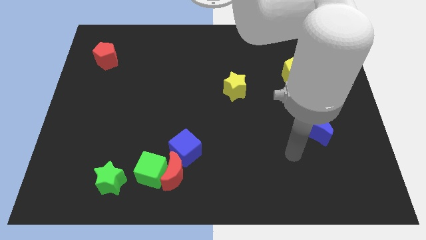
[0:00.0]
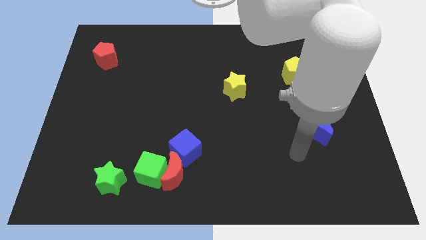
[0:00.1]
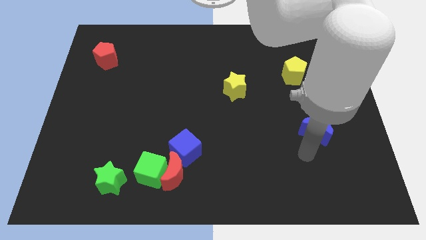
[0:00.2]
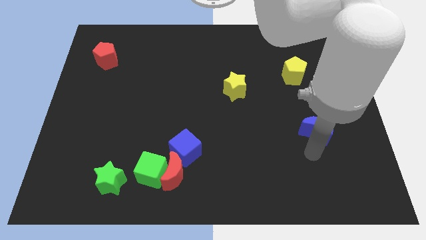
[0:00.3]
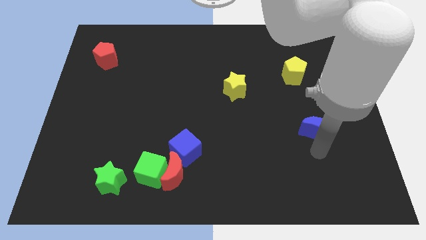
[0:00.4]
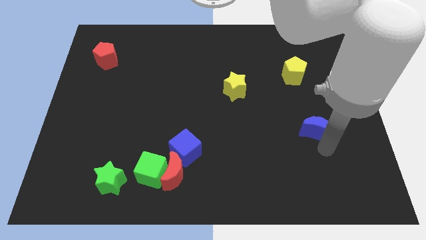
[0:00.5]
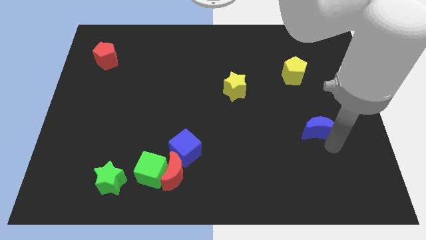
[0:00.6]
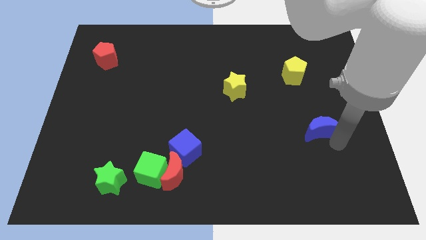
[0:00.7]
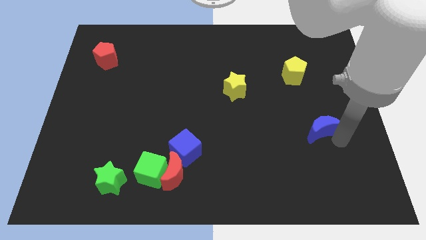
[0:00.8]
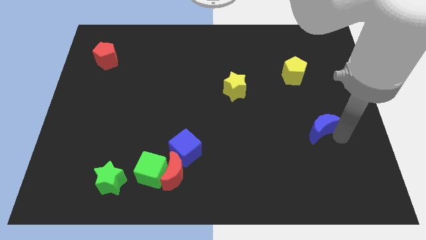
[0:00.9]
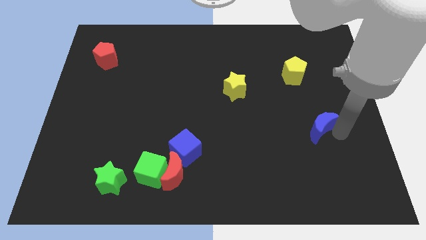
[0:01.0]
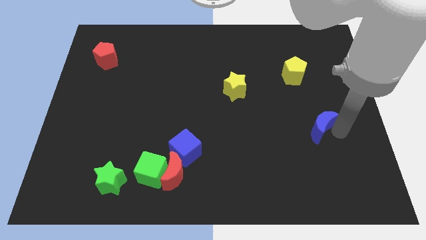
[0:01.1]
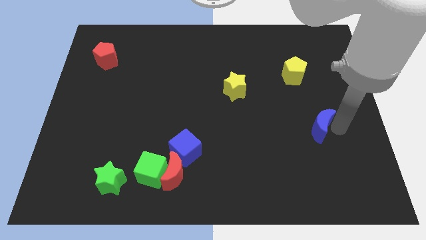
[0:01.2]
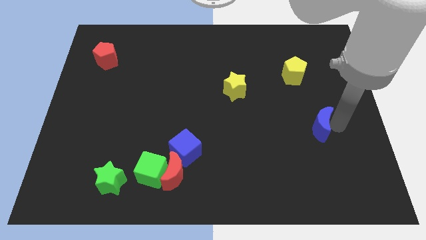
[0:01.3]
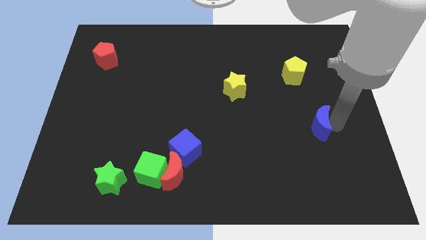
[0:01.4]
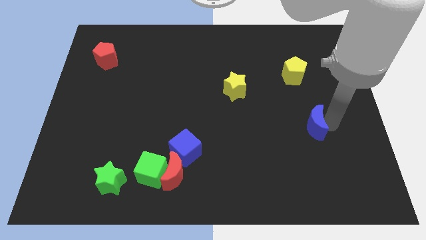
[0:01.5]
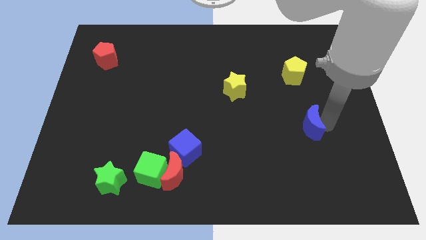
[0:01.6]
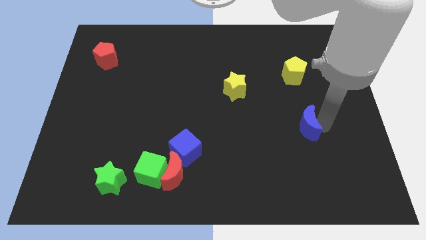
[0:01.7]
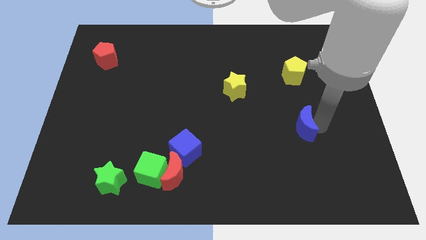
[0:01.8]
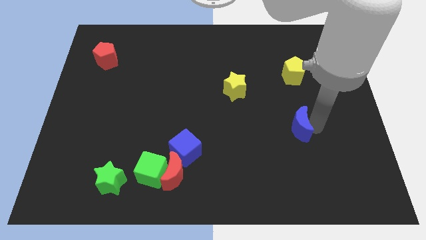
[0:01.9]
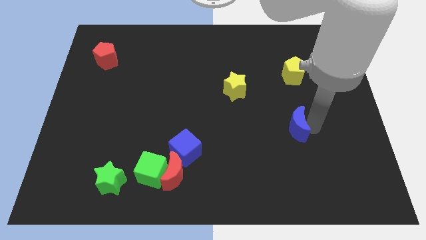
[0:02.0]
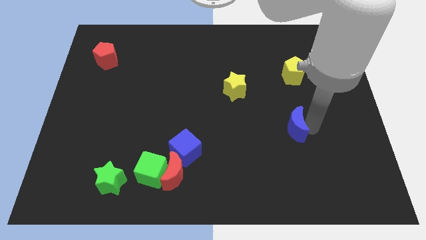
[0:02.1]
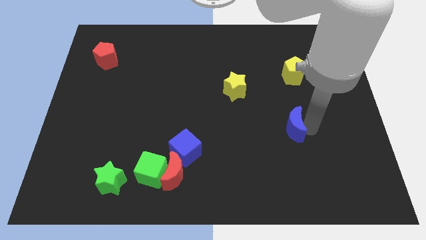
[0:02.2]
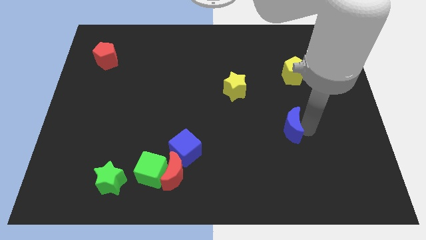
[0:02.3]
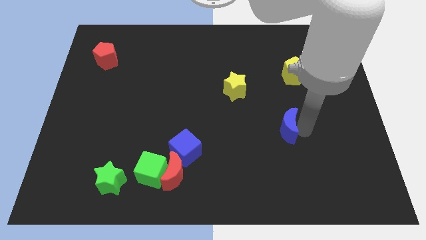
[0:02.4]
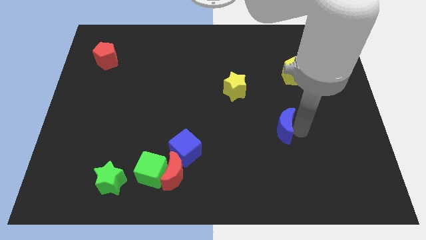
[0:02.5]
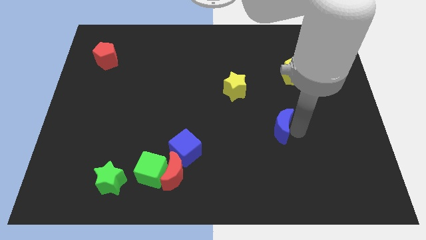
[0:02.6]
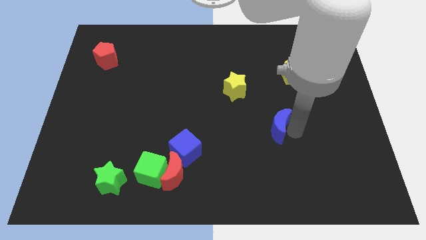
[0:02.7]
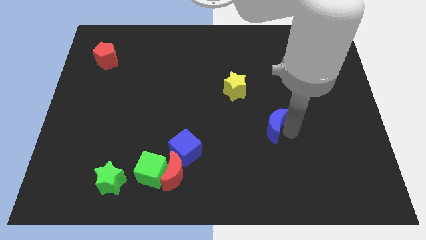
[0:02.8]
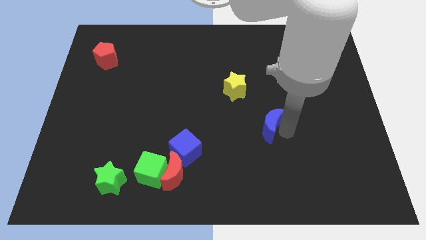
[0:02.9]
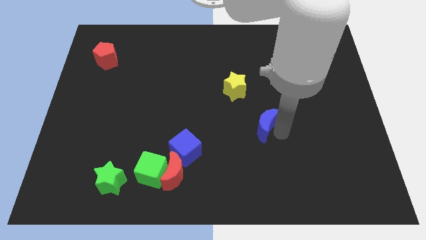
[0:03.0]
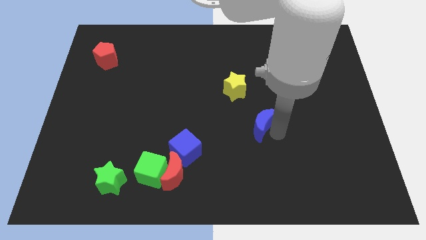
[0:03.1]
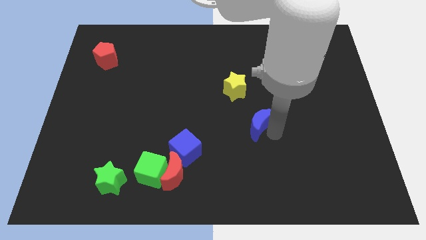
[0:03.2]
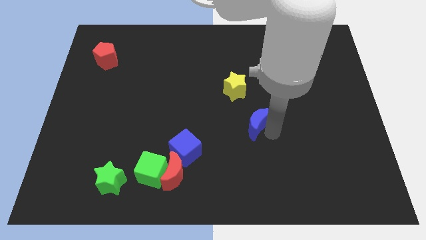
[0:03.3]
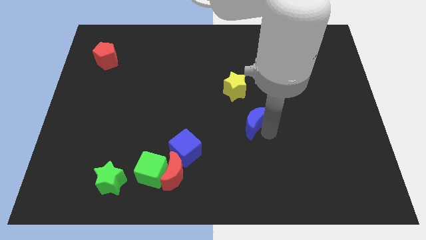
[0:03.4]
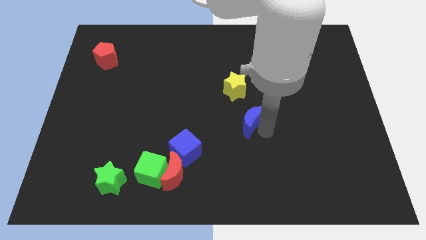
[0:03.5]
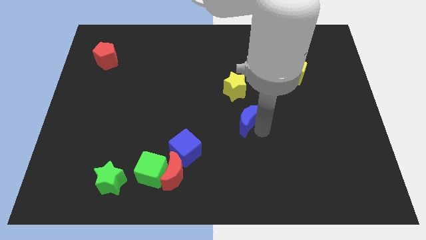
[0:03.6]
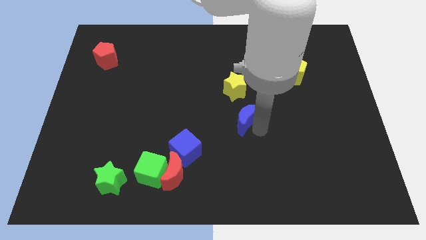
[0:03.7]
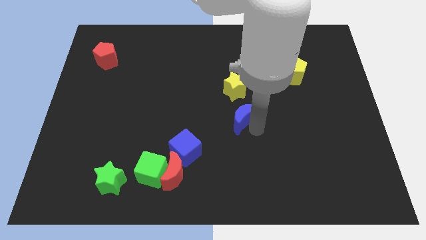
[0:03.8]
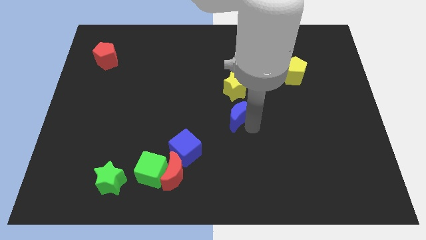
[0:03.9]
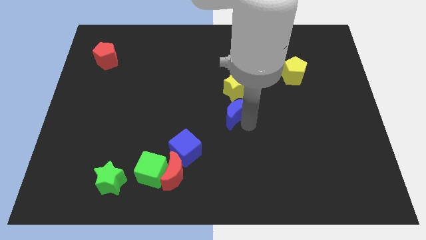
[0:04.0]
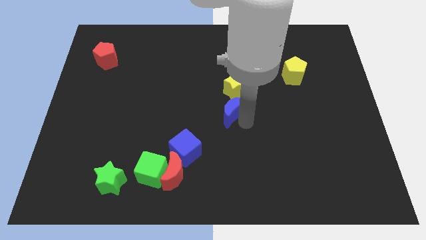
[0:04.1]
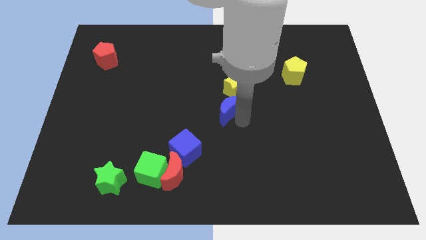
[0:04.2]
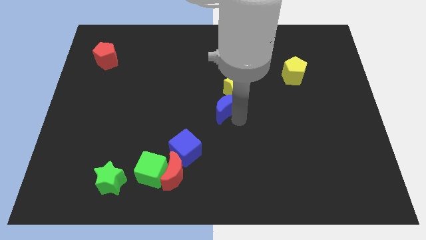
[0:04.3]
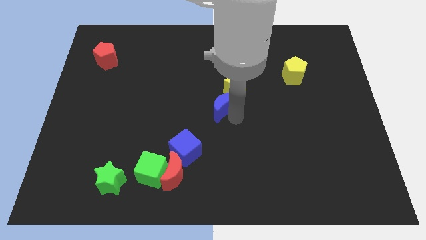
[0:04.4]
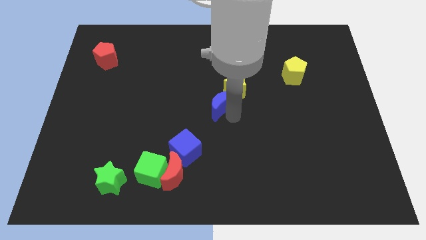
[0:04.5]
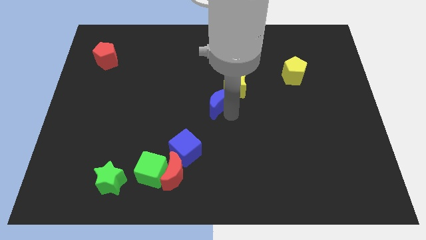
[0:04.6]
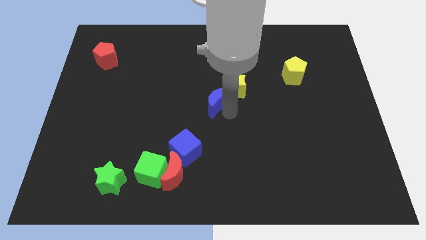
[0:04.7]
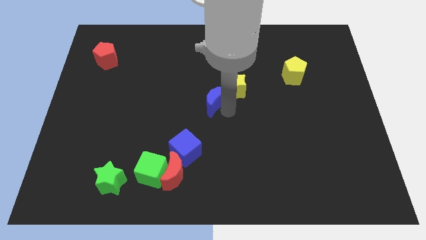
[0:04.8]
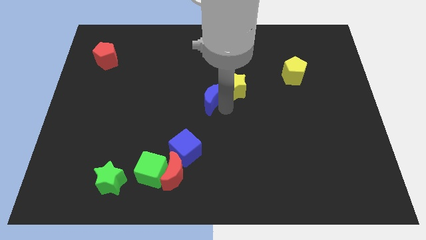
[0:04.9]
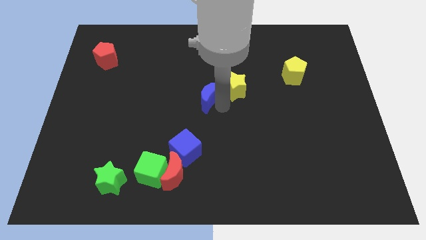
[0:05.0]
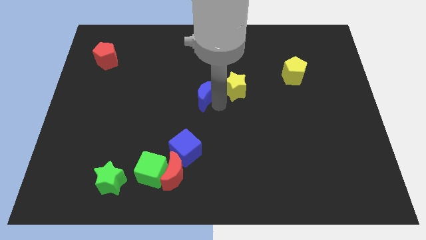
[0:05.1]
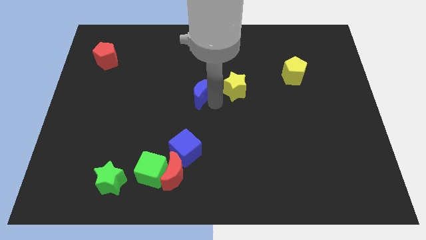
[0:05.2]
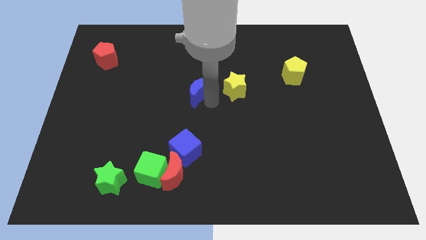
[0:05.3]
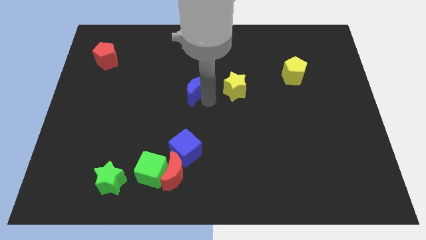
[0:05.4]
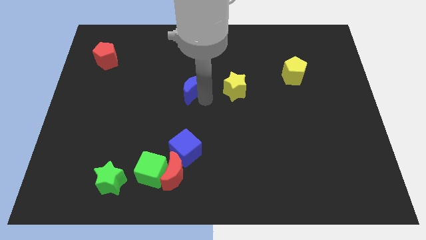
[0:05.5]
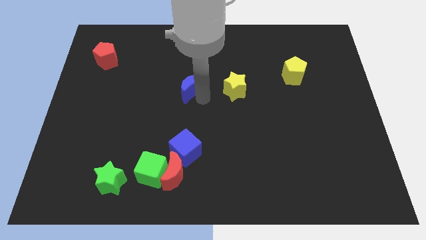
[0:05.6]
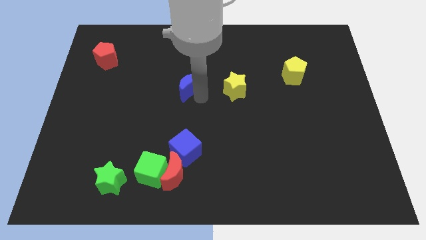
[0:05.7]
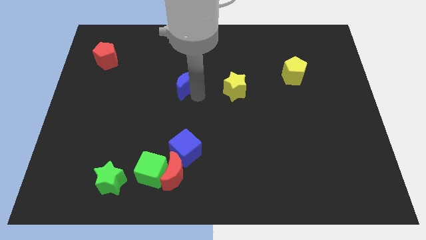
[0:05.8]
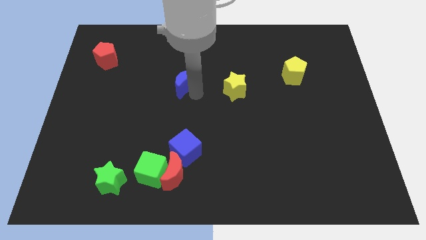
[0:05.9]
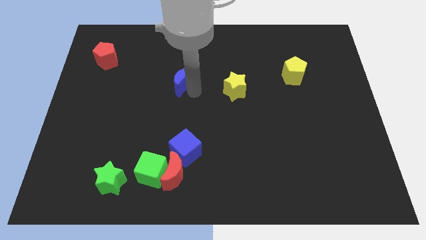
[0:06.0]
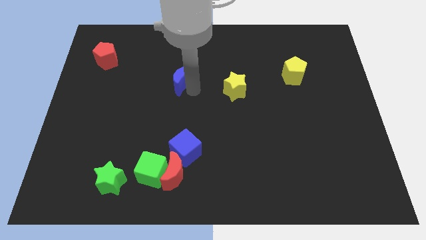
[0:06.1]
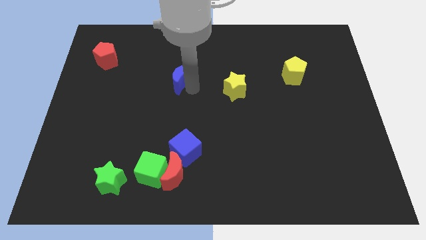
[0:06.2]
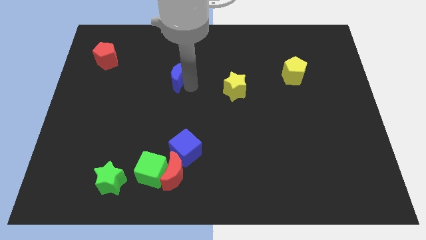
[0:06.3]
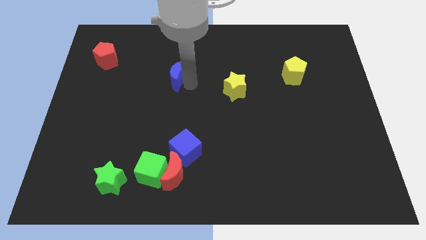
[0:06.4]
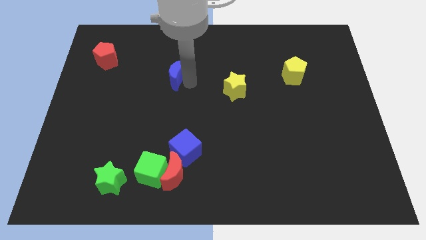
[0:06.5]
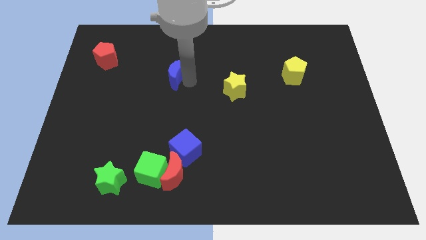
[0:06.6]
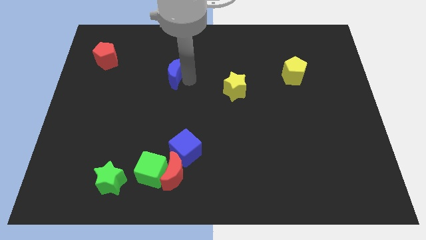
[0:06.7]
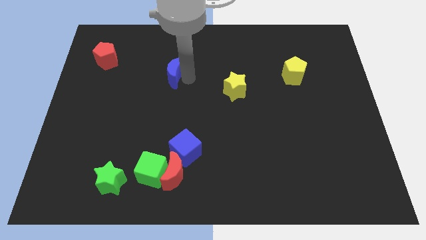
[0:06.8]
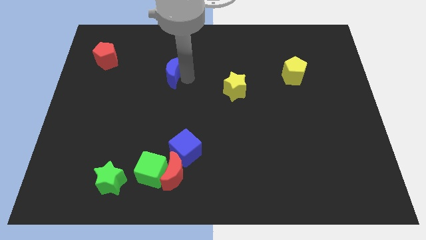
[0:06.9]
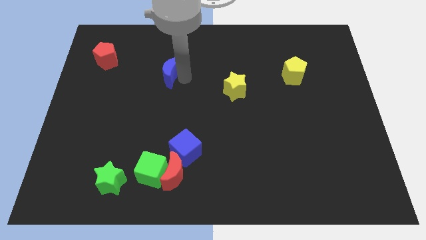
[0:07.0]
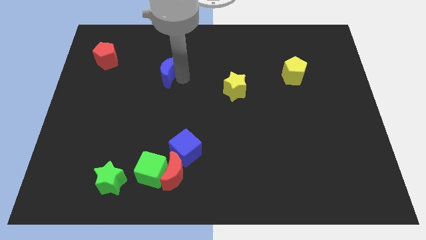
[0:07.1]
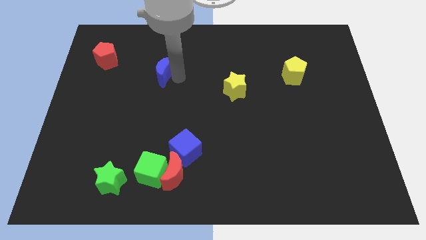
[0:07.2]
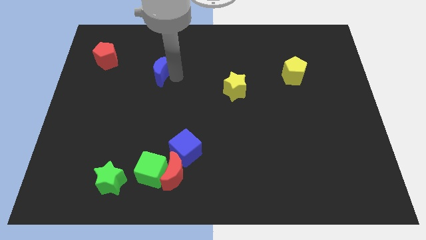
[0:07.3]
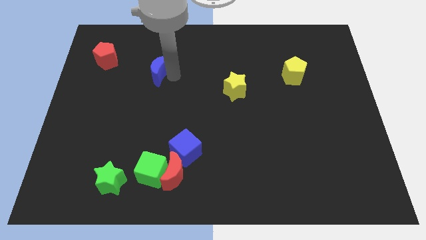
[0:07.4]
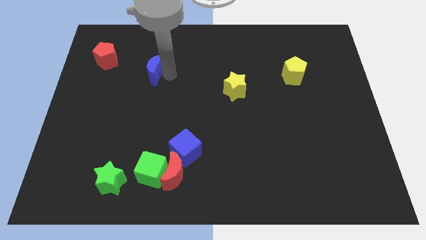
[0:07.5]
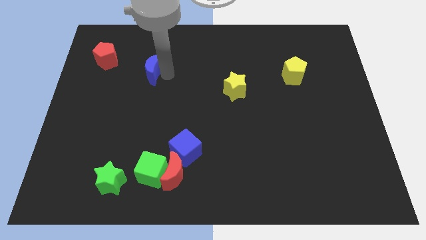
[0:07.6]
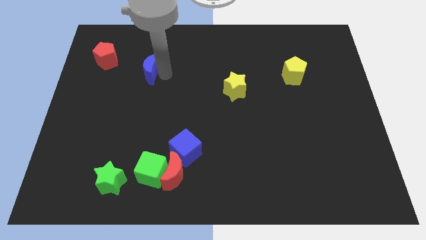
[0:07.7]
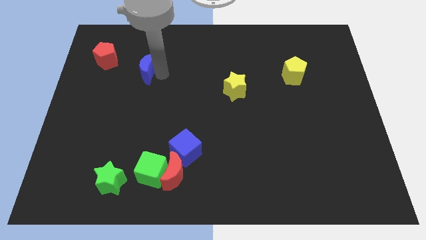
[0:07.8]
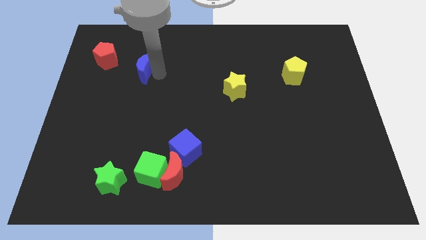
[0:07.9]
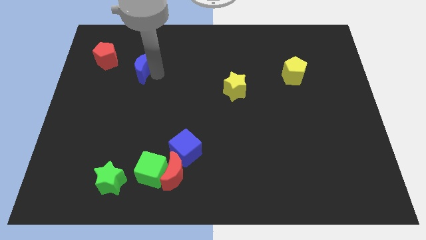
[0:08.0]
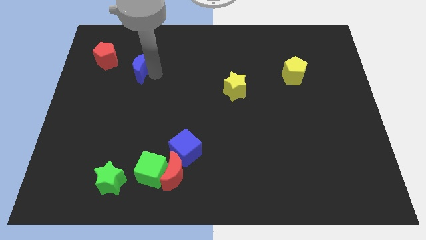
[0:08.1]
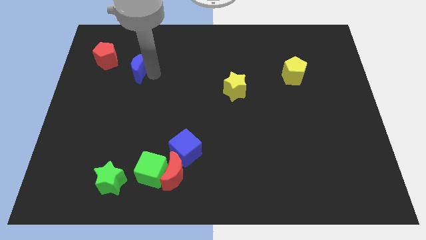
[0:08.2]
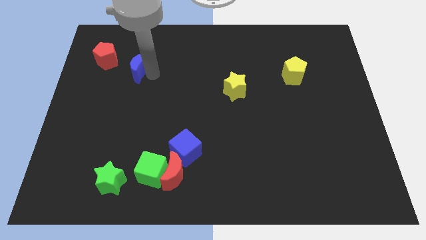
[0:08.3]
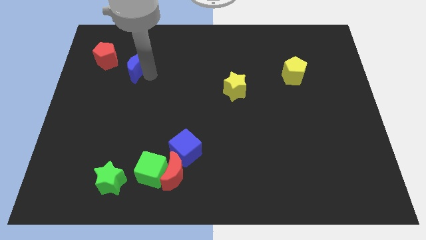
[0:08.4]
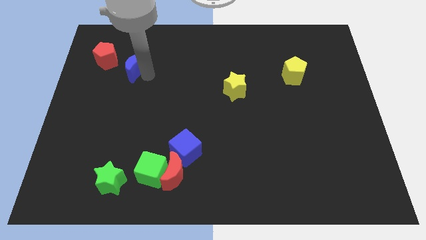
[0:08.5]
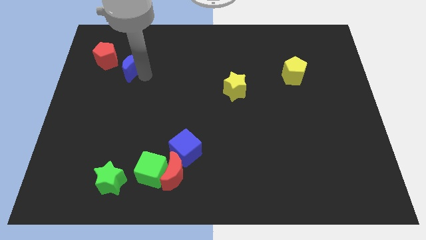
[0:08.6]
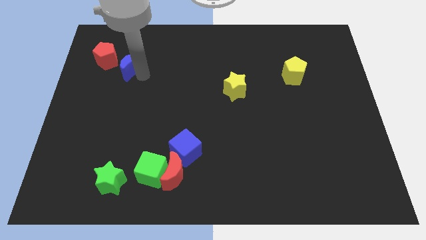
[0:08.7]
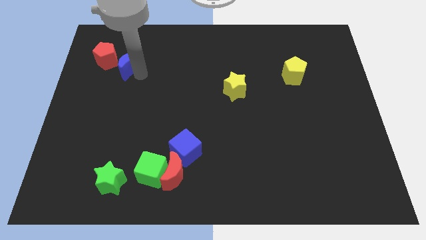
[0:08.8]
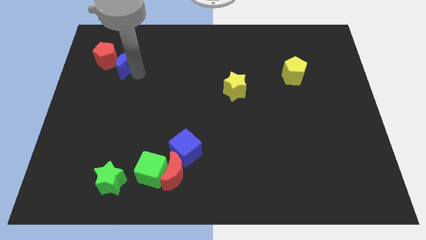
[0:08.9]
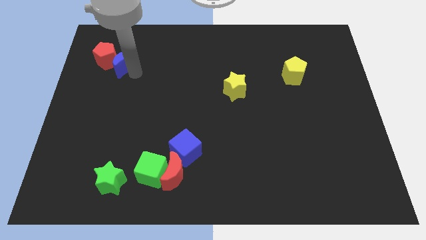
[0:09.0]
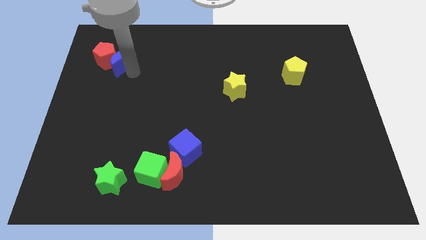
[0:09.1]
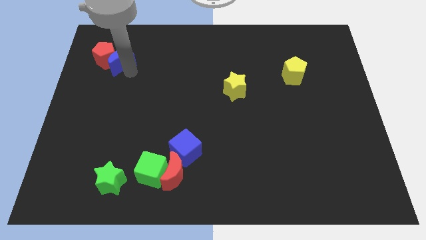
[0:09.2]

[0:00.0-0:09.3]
push the blue moon towards the red pentagon
